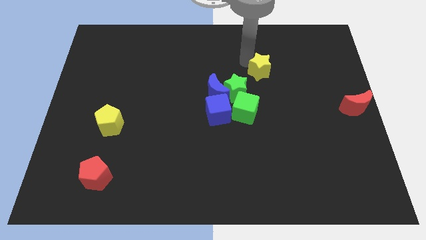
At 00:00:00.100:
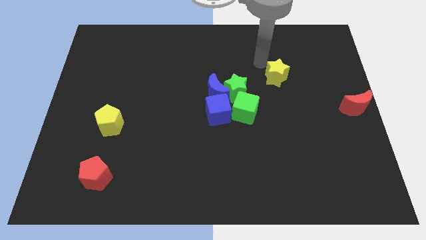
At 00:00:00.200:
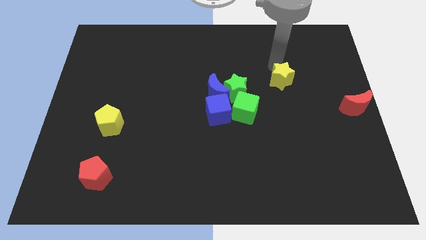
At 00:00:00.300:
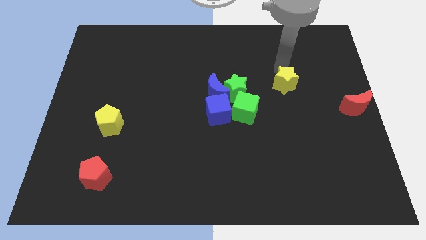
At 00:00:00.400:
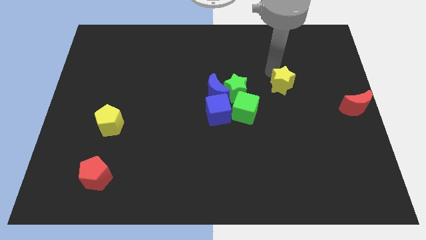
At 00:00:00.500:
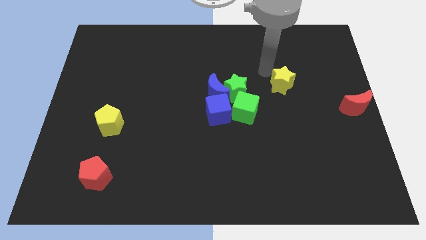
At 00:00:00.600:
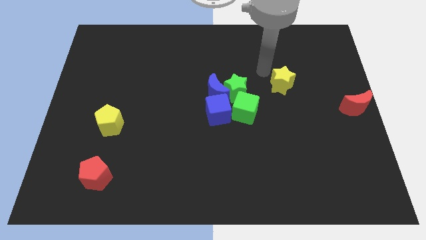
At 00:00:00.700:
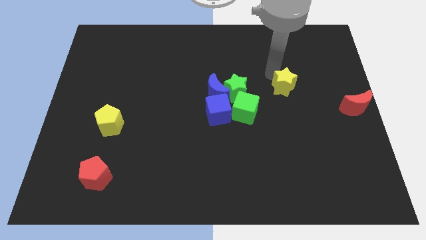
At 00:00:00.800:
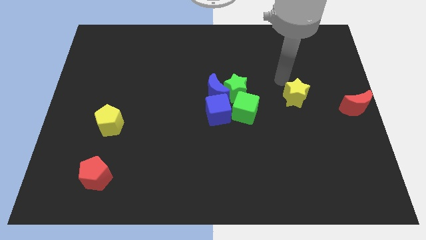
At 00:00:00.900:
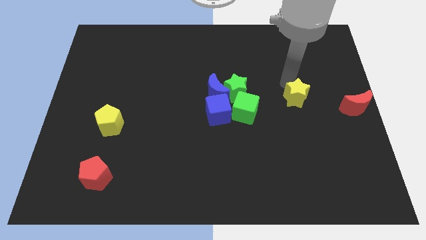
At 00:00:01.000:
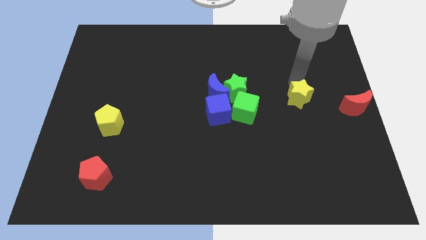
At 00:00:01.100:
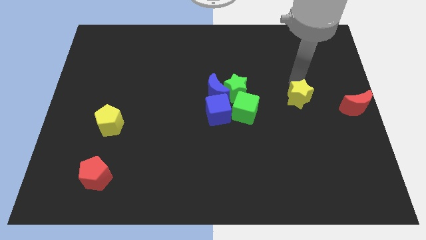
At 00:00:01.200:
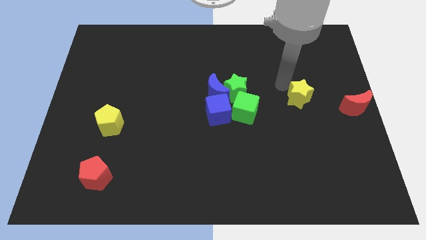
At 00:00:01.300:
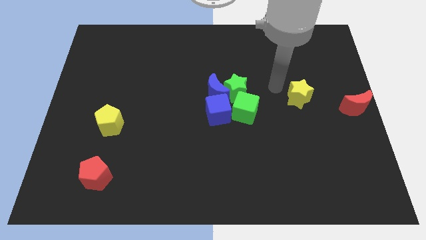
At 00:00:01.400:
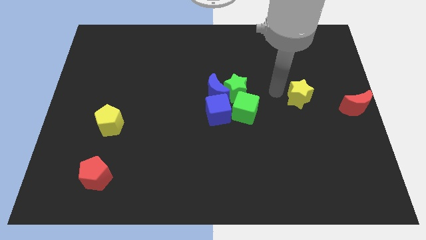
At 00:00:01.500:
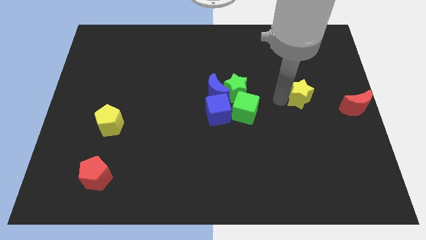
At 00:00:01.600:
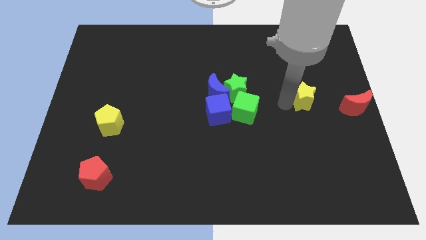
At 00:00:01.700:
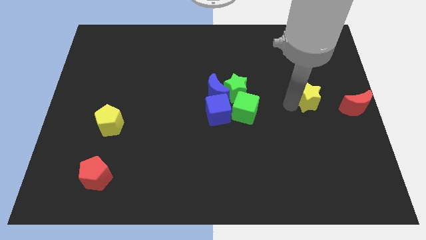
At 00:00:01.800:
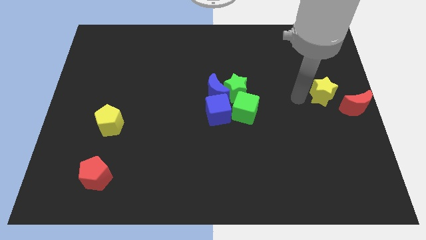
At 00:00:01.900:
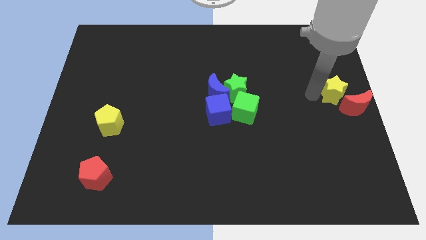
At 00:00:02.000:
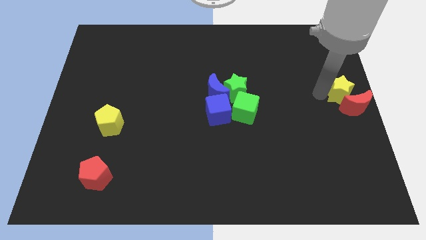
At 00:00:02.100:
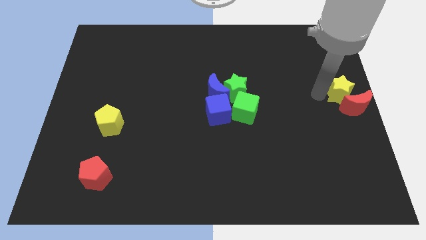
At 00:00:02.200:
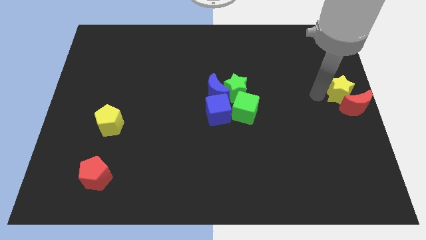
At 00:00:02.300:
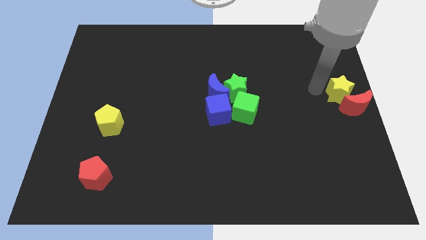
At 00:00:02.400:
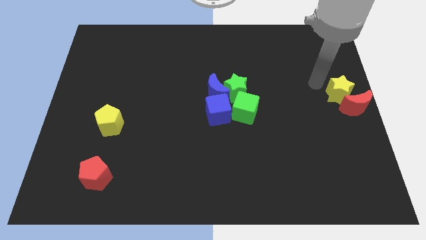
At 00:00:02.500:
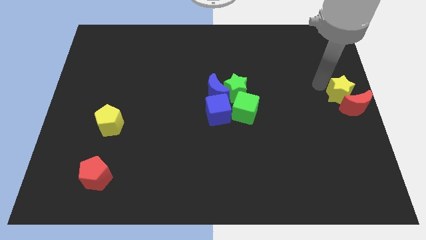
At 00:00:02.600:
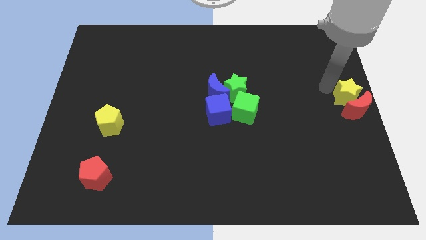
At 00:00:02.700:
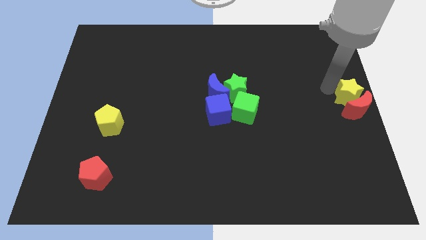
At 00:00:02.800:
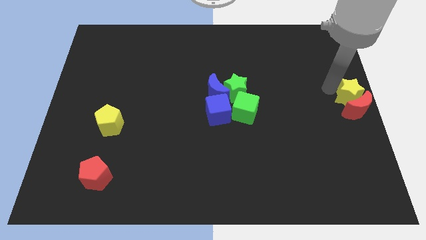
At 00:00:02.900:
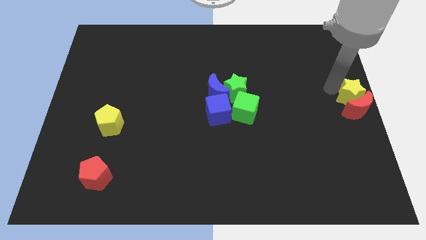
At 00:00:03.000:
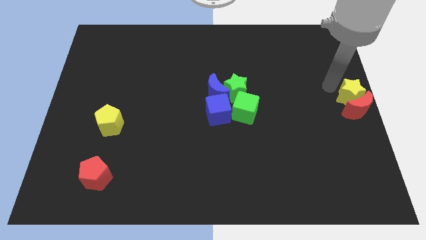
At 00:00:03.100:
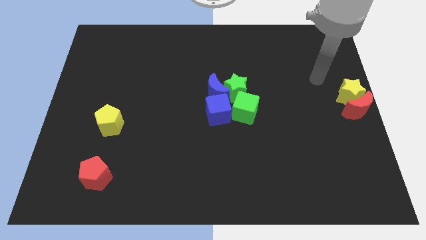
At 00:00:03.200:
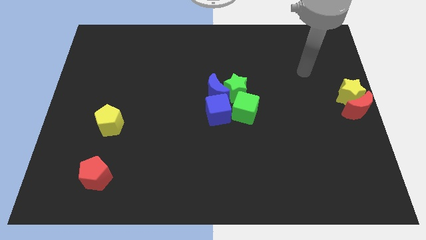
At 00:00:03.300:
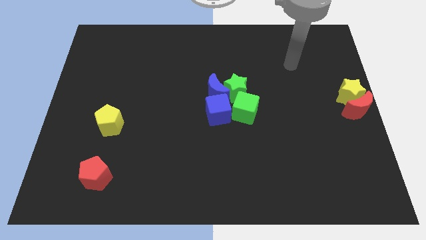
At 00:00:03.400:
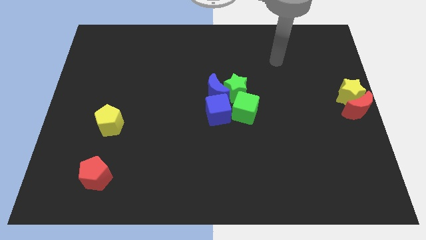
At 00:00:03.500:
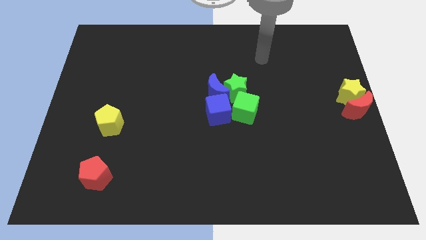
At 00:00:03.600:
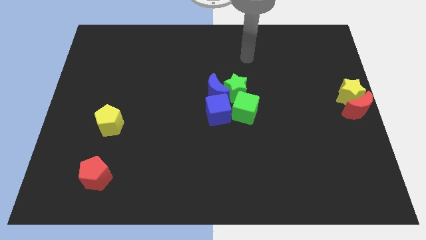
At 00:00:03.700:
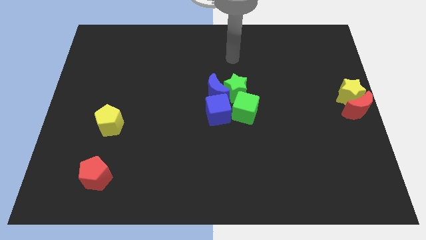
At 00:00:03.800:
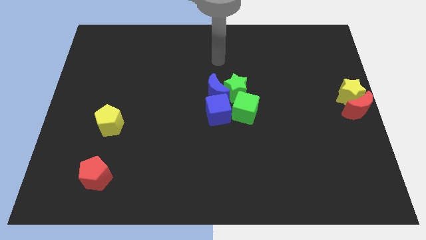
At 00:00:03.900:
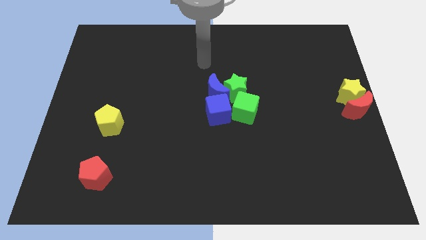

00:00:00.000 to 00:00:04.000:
push the yellow star into the red moon

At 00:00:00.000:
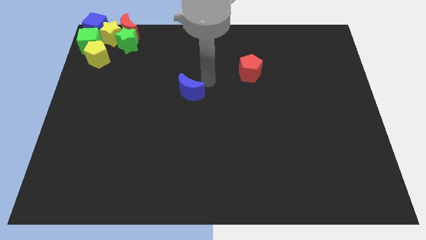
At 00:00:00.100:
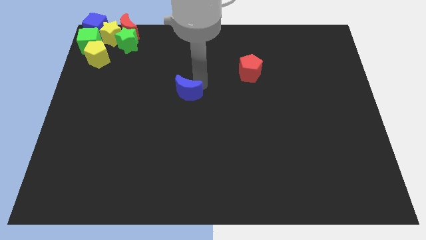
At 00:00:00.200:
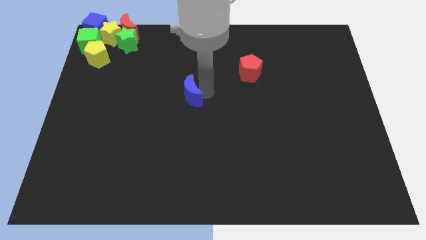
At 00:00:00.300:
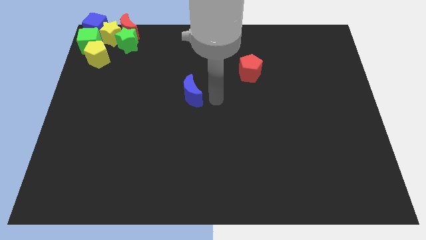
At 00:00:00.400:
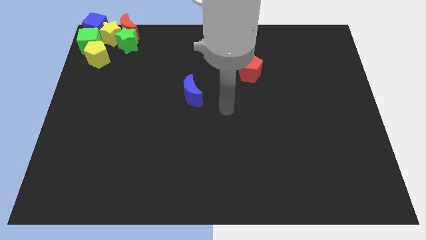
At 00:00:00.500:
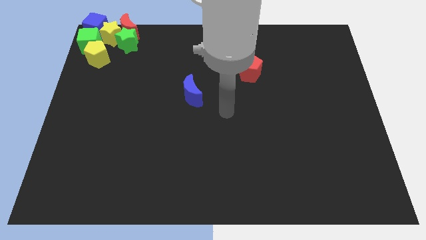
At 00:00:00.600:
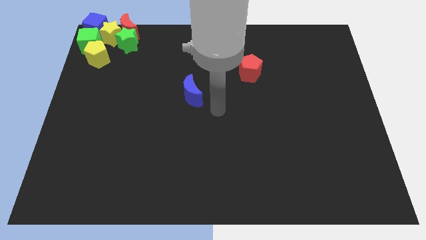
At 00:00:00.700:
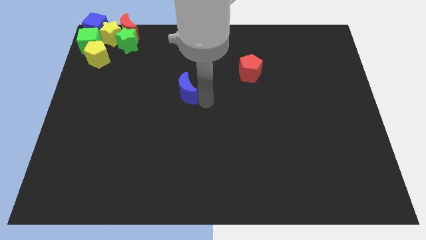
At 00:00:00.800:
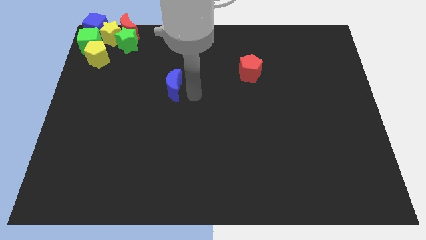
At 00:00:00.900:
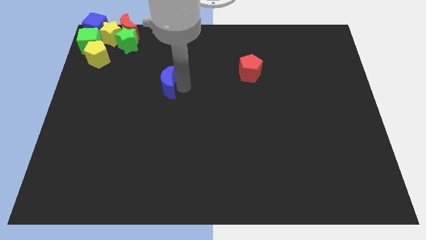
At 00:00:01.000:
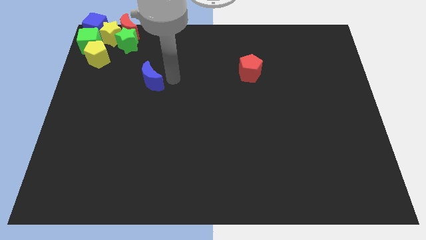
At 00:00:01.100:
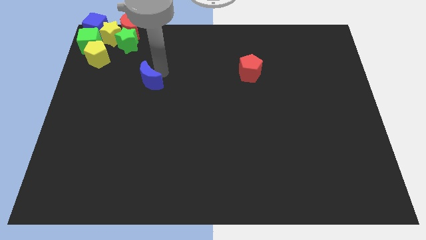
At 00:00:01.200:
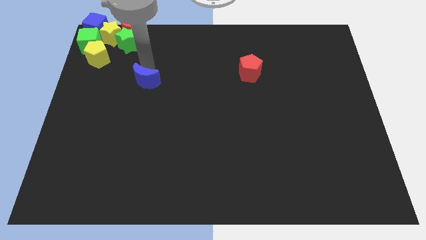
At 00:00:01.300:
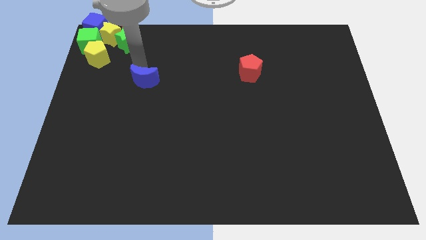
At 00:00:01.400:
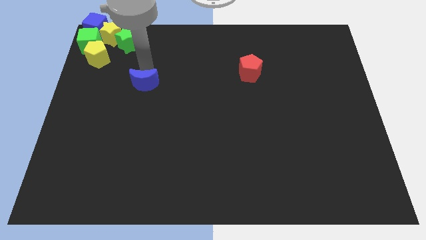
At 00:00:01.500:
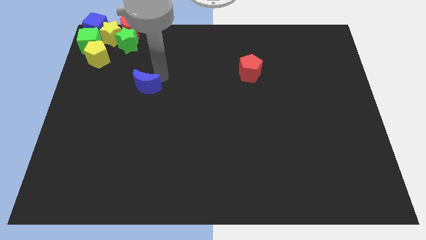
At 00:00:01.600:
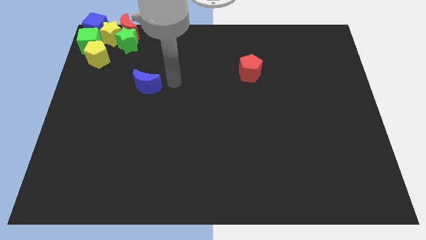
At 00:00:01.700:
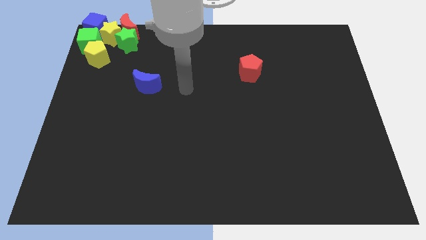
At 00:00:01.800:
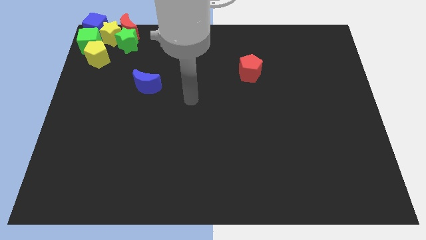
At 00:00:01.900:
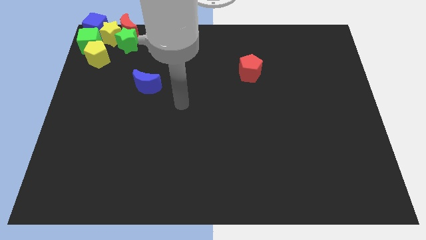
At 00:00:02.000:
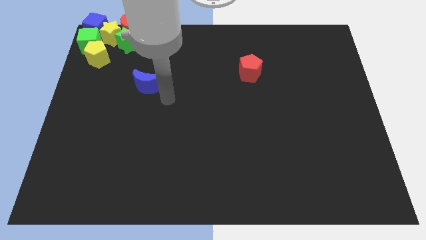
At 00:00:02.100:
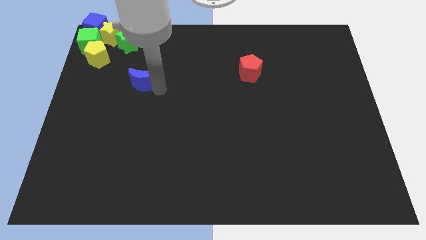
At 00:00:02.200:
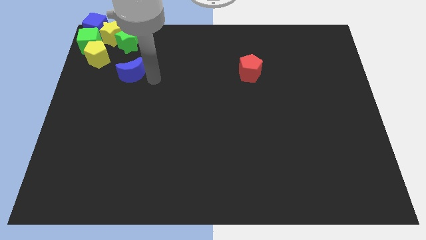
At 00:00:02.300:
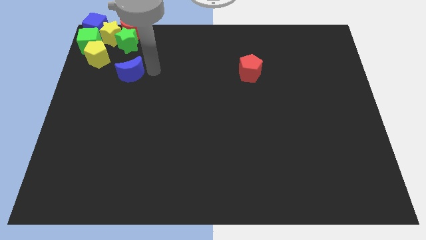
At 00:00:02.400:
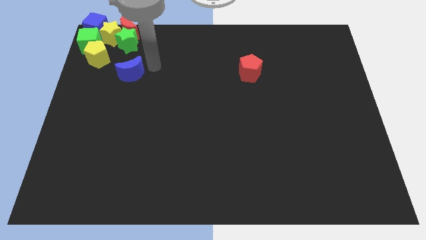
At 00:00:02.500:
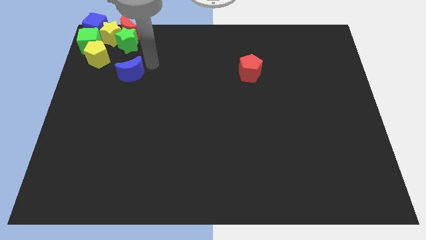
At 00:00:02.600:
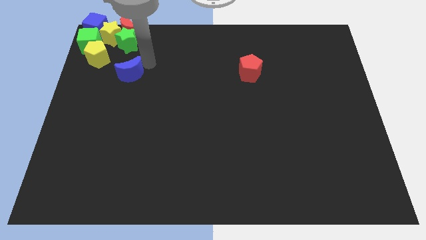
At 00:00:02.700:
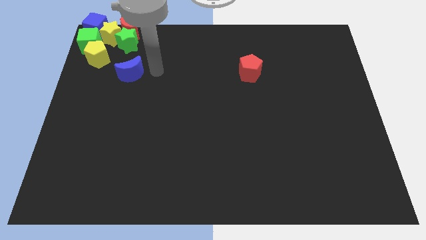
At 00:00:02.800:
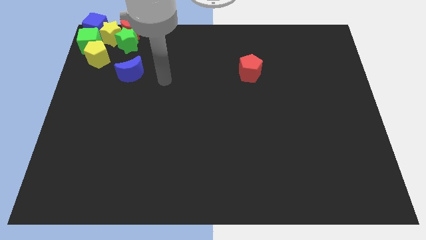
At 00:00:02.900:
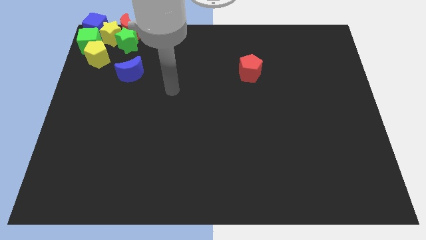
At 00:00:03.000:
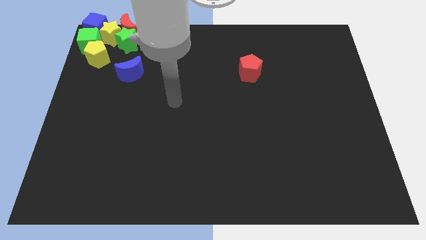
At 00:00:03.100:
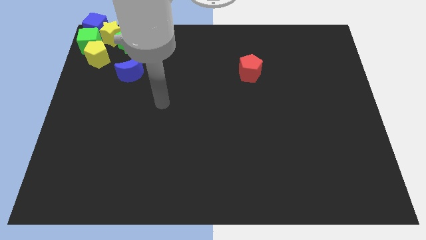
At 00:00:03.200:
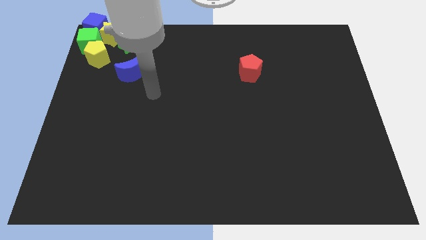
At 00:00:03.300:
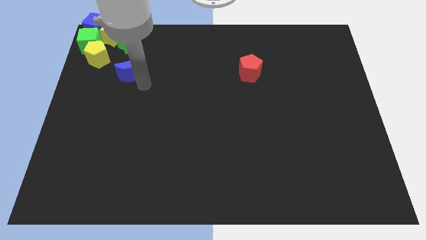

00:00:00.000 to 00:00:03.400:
move the blue moon in between the yellow pentagon and green star

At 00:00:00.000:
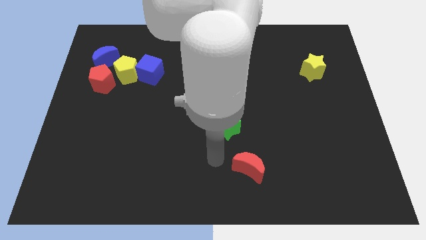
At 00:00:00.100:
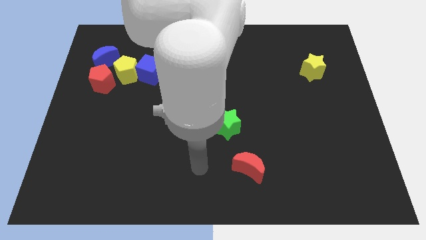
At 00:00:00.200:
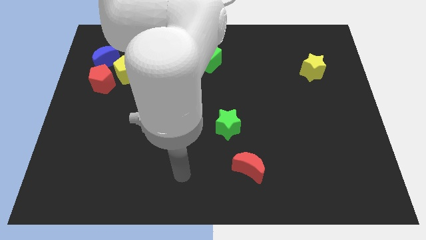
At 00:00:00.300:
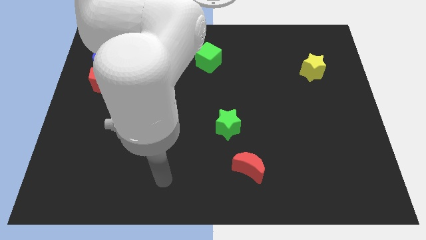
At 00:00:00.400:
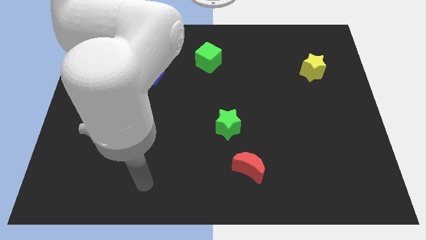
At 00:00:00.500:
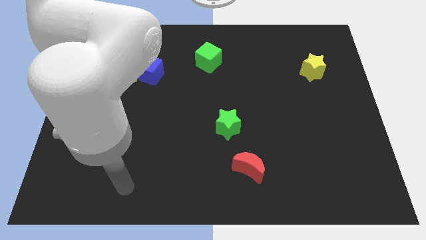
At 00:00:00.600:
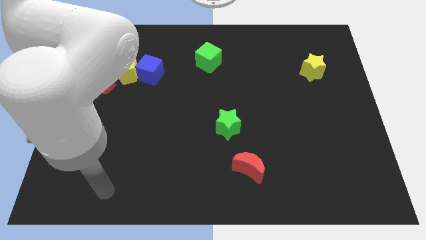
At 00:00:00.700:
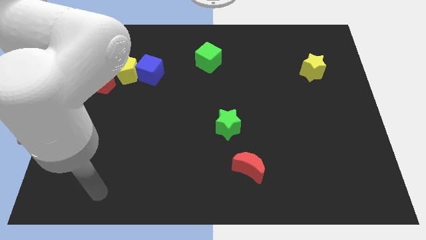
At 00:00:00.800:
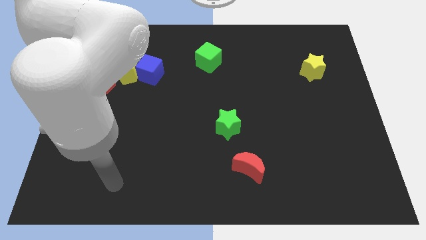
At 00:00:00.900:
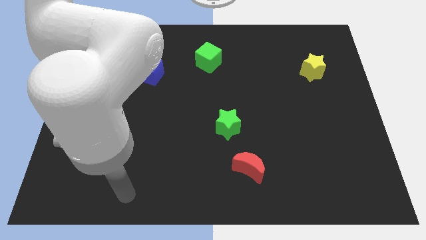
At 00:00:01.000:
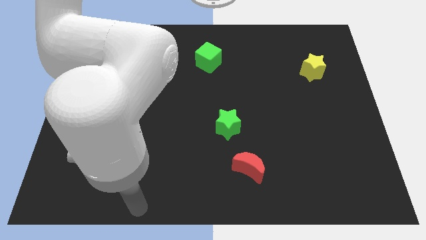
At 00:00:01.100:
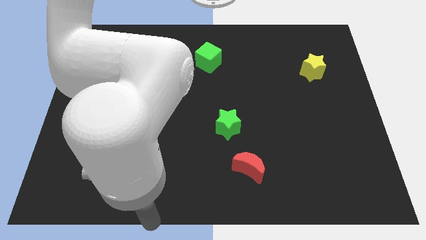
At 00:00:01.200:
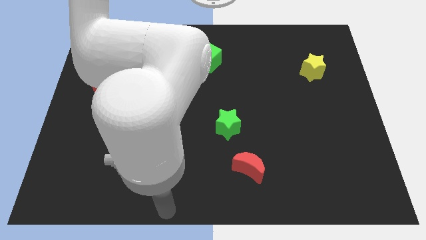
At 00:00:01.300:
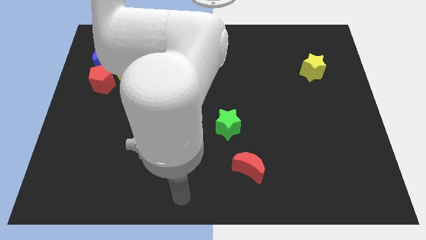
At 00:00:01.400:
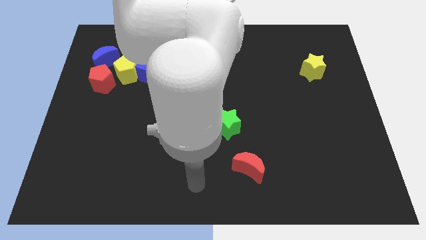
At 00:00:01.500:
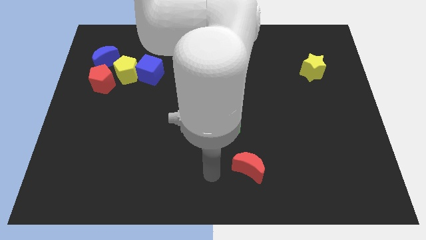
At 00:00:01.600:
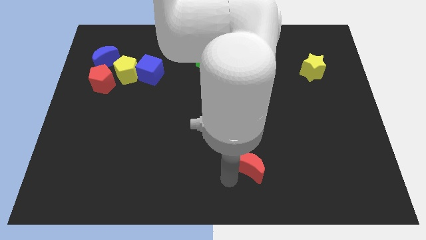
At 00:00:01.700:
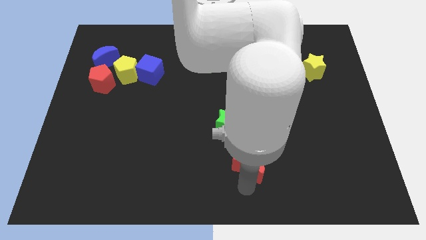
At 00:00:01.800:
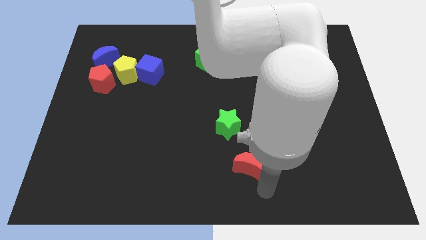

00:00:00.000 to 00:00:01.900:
move your arm to the bottom of the red crescent
